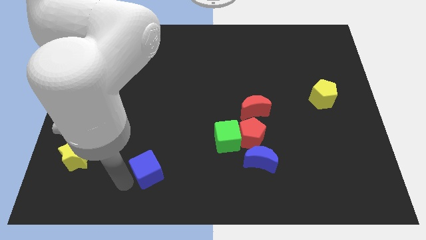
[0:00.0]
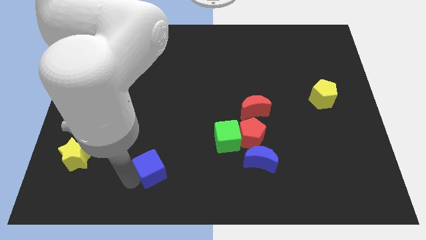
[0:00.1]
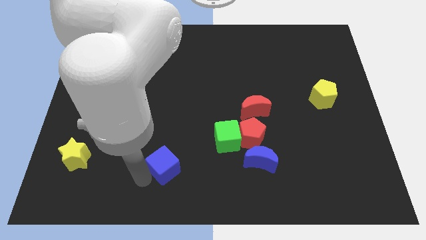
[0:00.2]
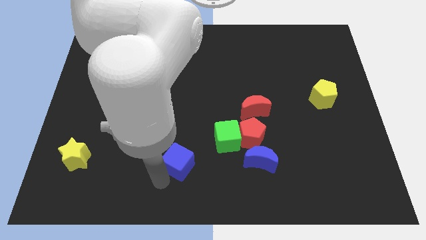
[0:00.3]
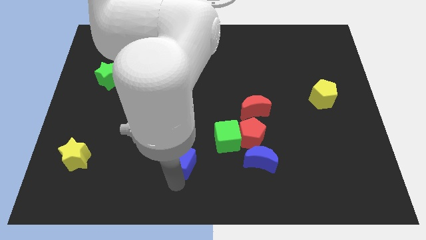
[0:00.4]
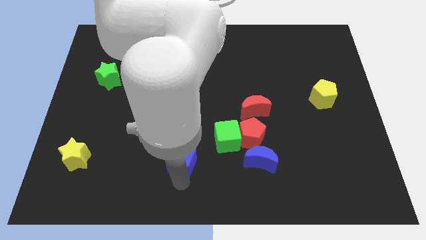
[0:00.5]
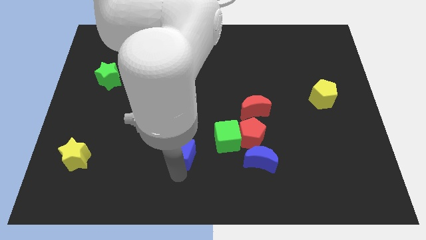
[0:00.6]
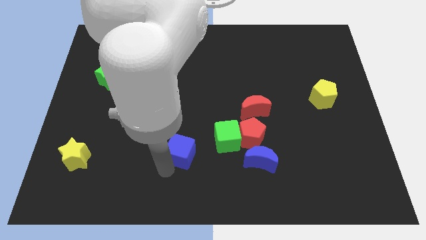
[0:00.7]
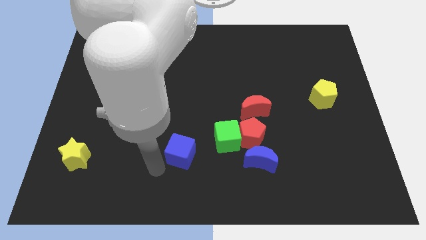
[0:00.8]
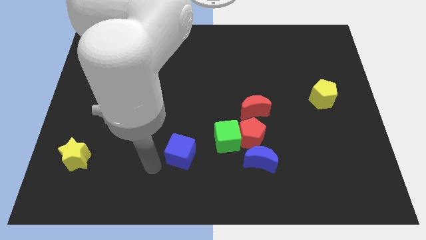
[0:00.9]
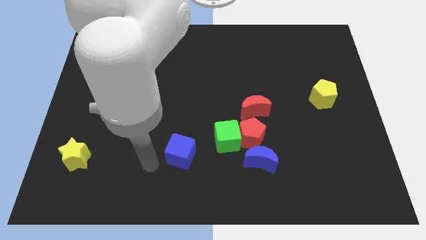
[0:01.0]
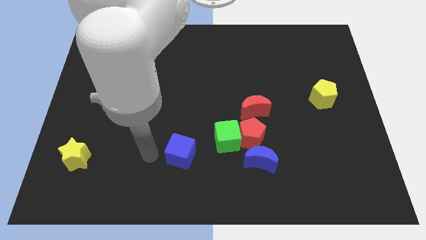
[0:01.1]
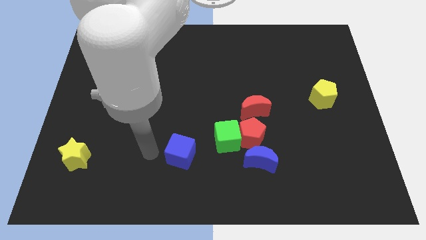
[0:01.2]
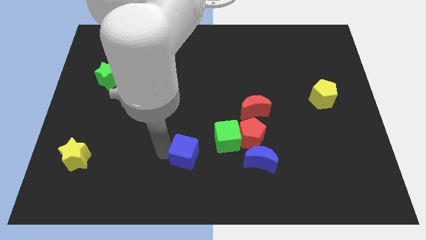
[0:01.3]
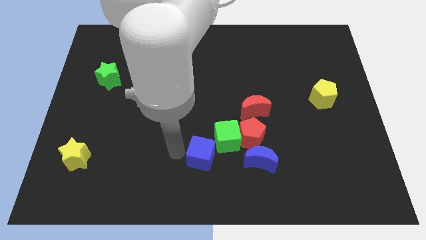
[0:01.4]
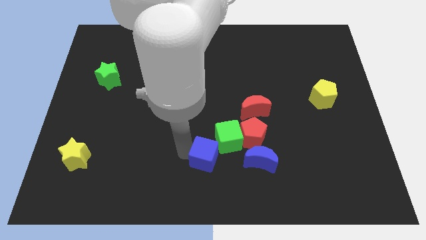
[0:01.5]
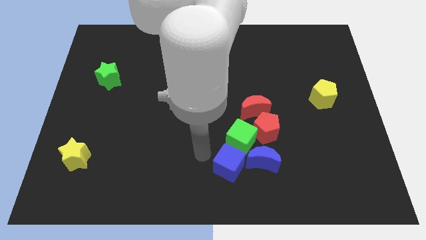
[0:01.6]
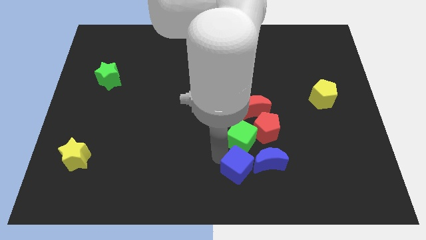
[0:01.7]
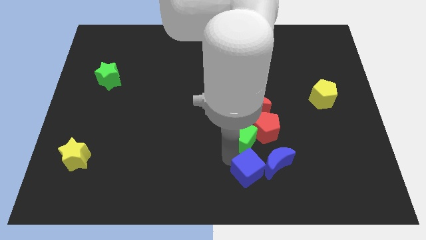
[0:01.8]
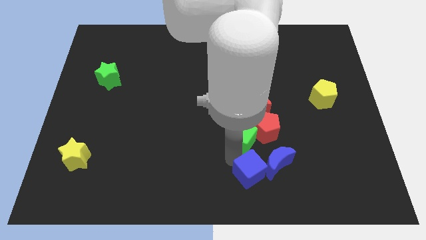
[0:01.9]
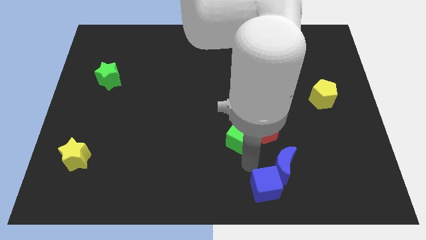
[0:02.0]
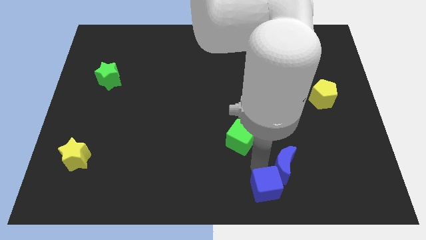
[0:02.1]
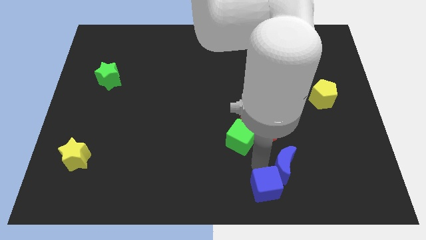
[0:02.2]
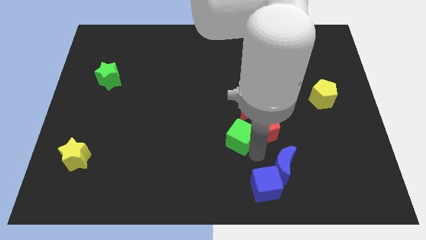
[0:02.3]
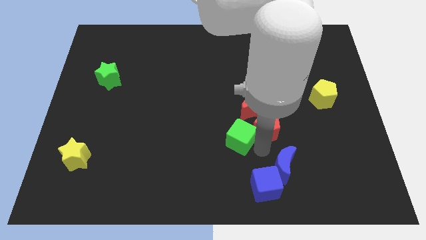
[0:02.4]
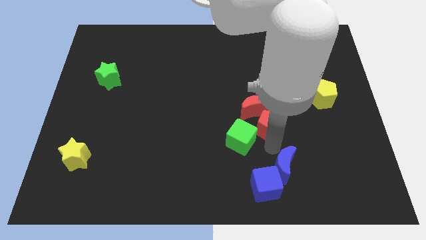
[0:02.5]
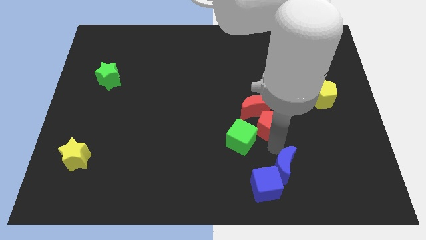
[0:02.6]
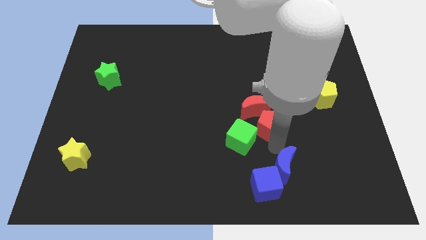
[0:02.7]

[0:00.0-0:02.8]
move blue cube at the bottom of blue moon

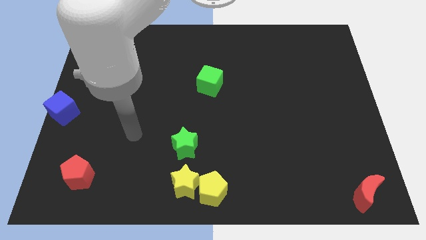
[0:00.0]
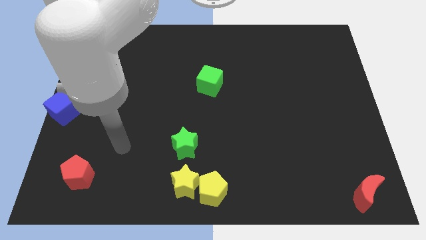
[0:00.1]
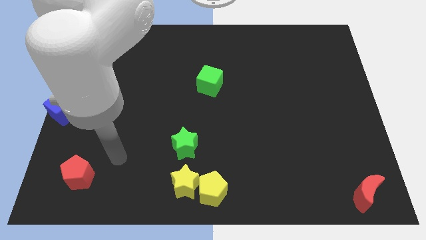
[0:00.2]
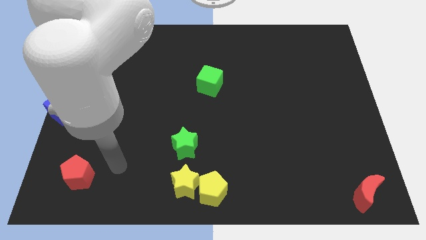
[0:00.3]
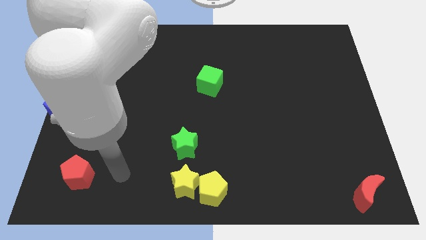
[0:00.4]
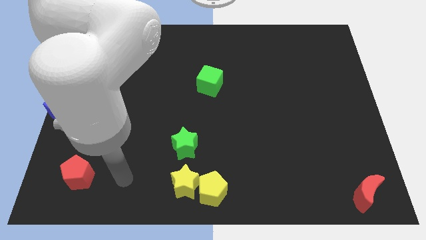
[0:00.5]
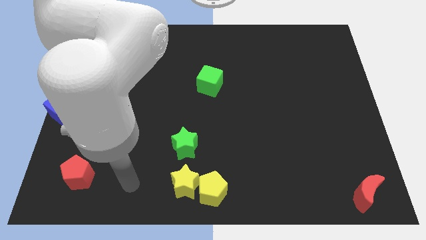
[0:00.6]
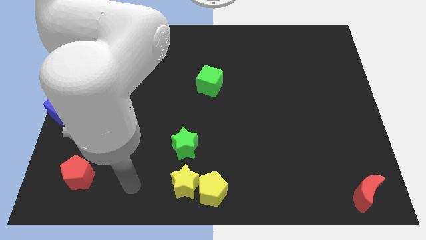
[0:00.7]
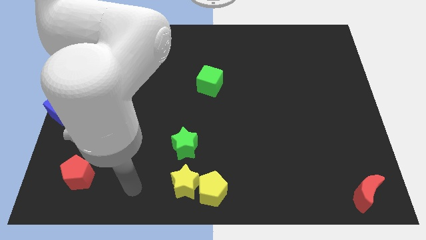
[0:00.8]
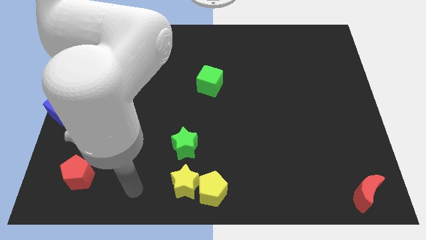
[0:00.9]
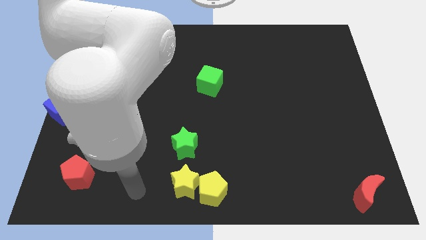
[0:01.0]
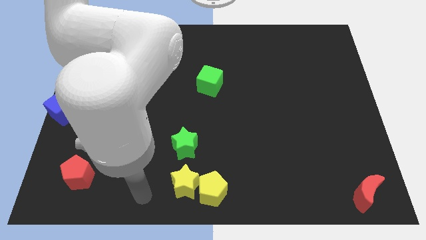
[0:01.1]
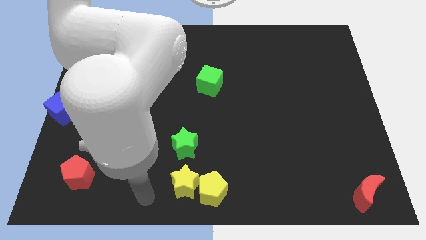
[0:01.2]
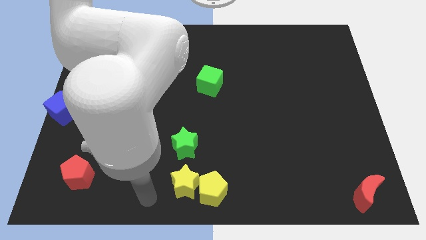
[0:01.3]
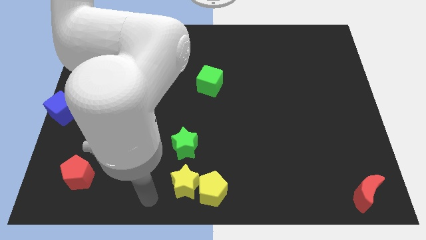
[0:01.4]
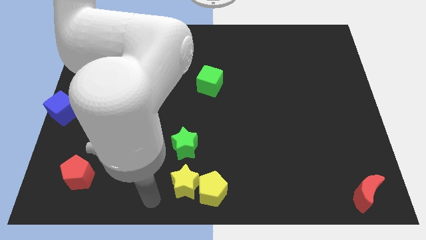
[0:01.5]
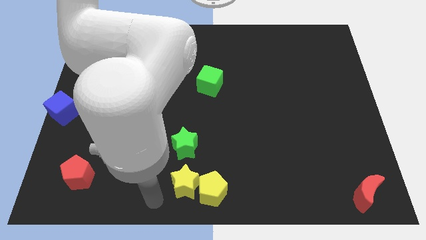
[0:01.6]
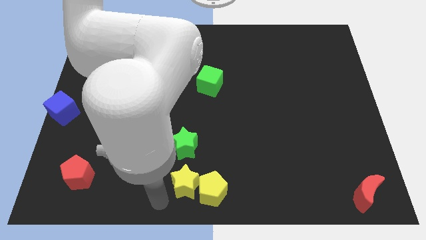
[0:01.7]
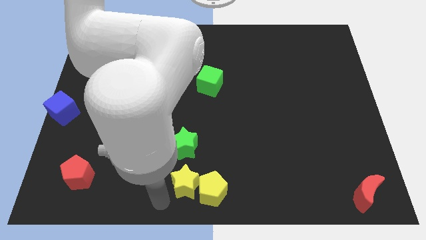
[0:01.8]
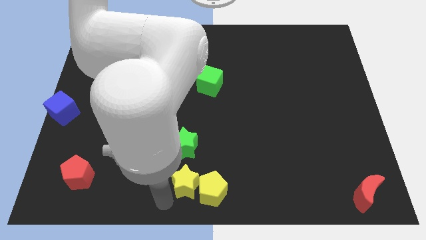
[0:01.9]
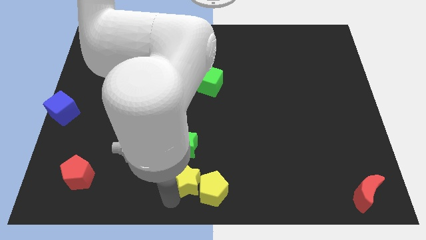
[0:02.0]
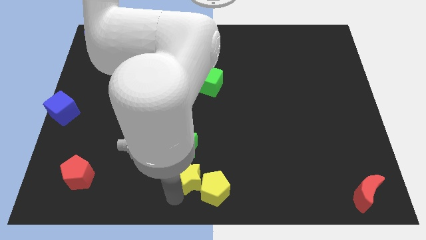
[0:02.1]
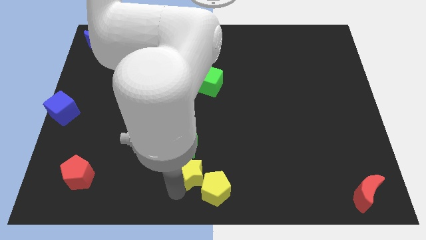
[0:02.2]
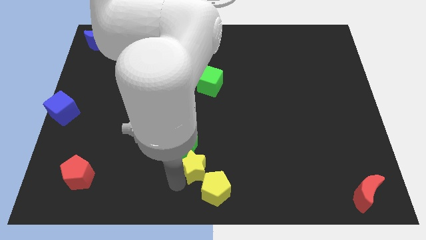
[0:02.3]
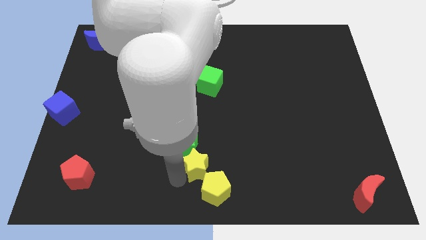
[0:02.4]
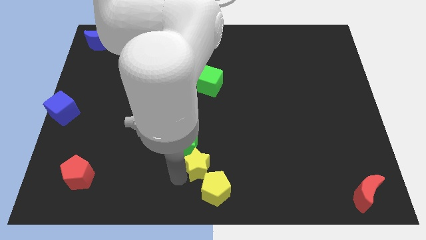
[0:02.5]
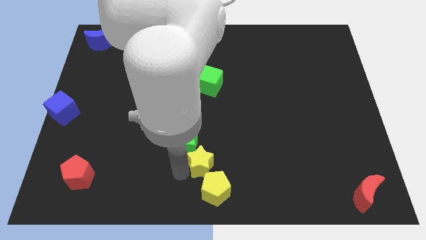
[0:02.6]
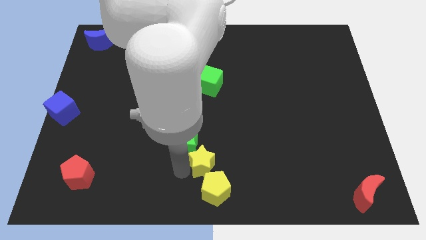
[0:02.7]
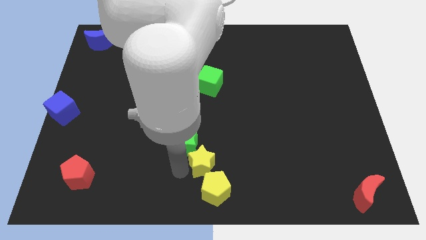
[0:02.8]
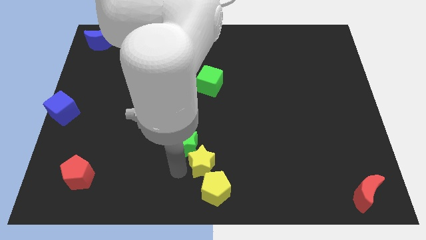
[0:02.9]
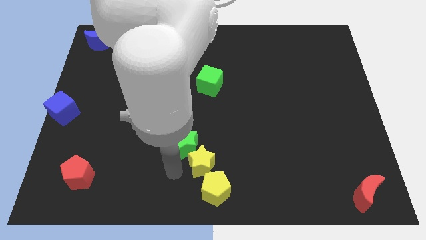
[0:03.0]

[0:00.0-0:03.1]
place yellow star to the bottom right of green star

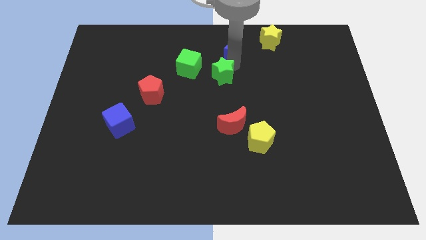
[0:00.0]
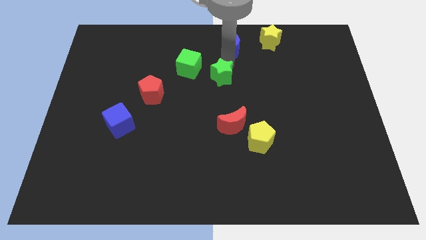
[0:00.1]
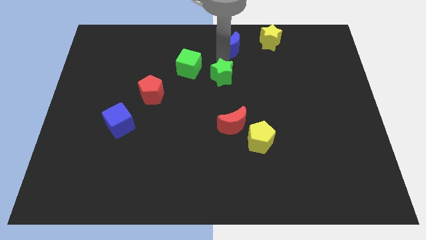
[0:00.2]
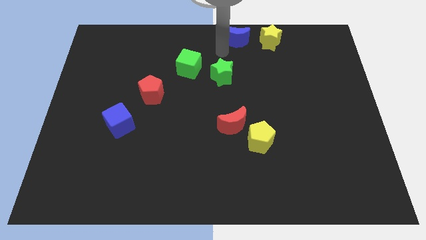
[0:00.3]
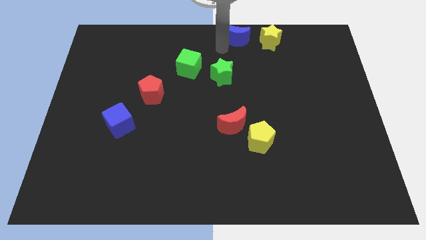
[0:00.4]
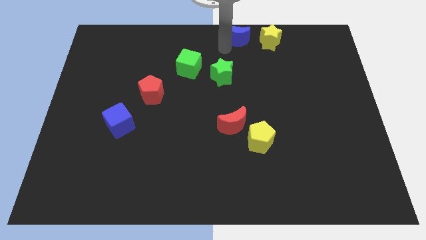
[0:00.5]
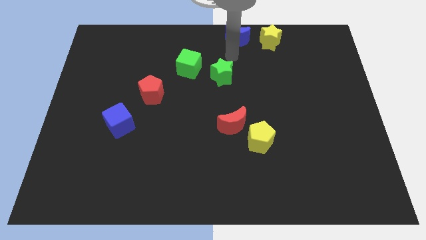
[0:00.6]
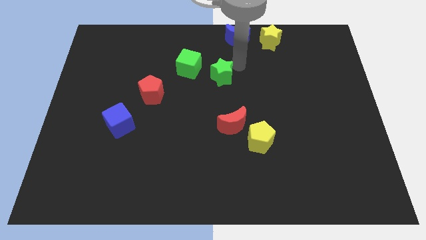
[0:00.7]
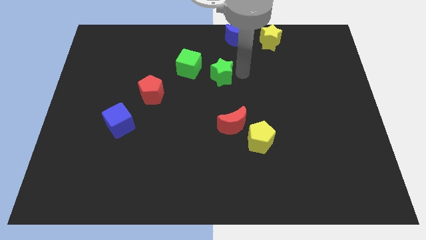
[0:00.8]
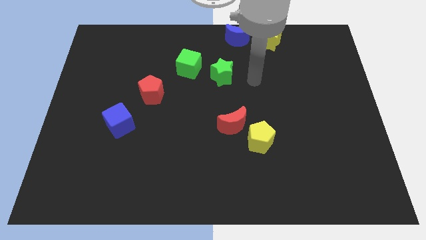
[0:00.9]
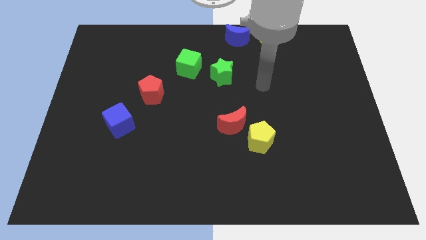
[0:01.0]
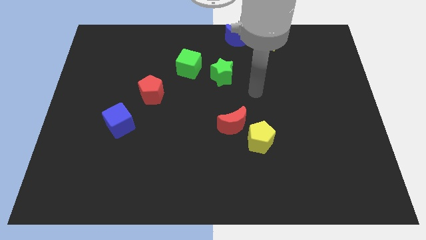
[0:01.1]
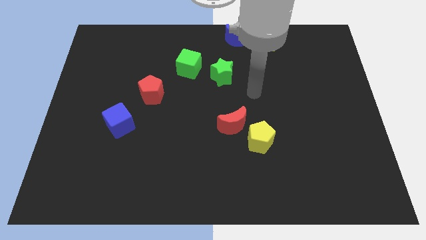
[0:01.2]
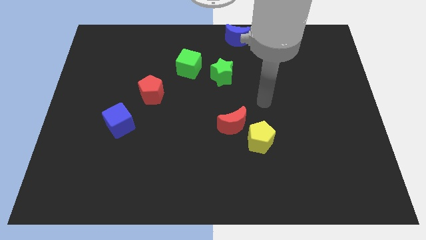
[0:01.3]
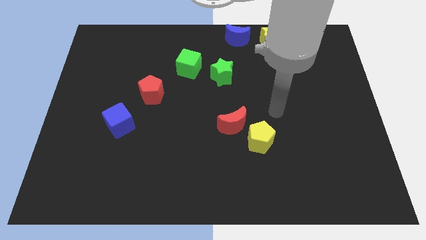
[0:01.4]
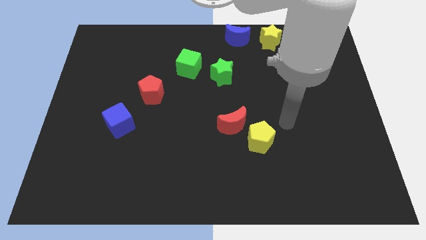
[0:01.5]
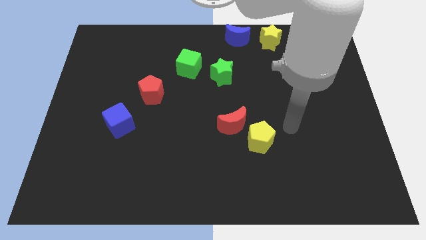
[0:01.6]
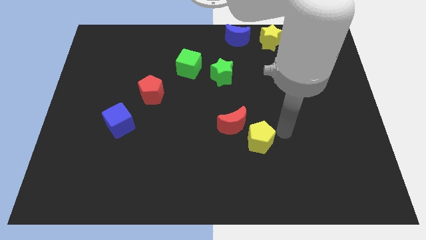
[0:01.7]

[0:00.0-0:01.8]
place the blue moon parallel left to the yellow star

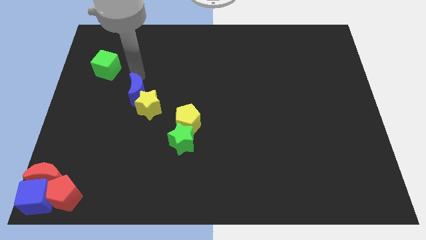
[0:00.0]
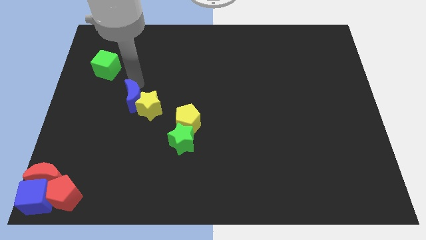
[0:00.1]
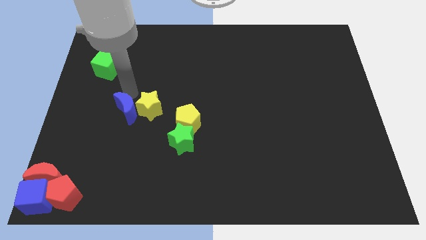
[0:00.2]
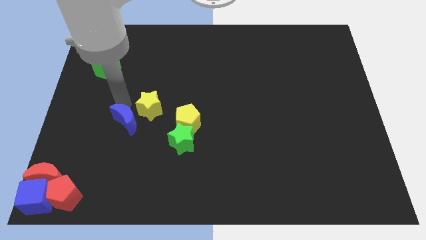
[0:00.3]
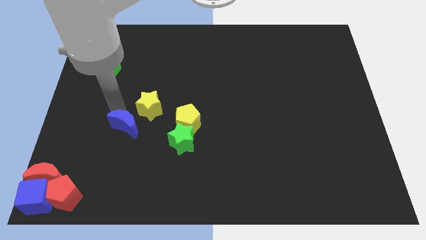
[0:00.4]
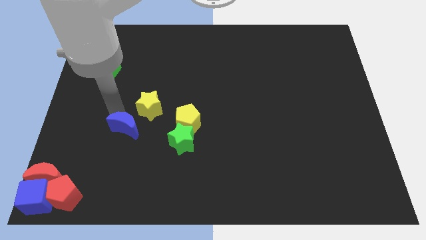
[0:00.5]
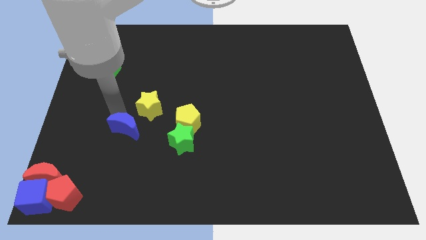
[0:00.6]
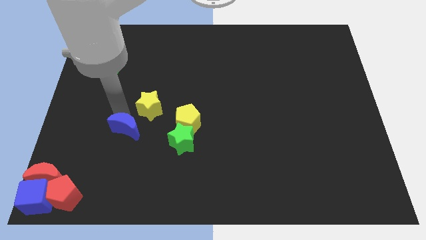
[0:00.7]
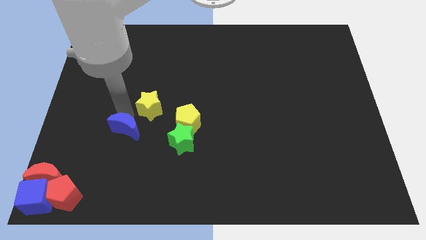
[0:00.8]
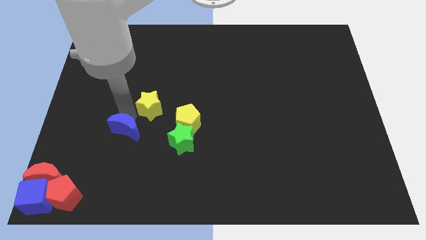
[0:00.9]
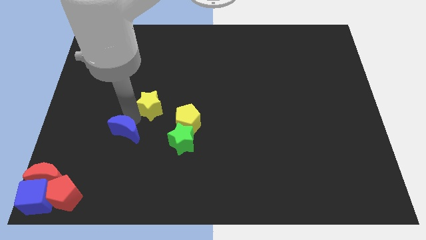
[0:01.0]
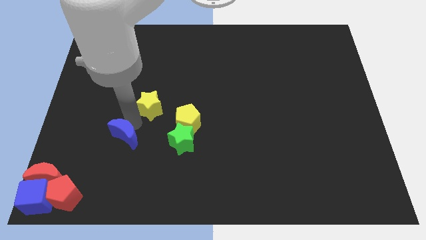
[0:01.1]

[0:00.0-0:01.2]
move the blue crescent to the left of the green star
